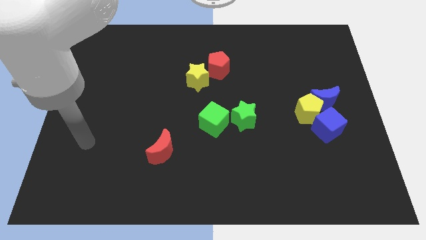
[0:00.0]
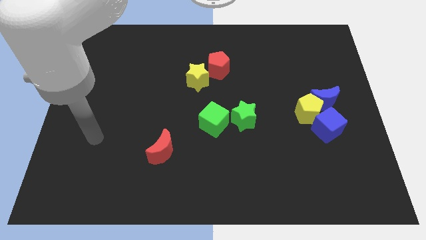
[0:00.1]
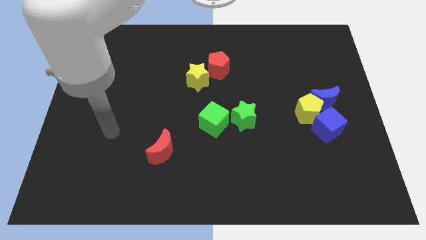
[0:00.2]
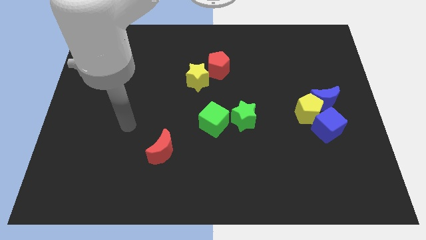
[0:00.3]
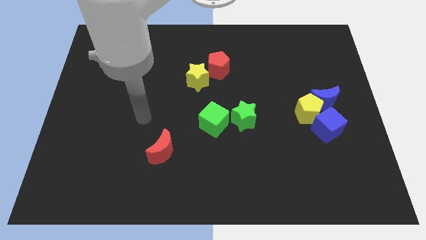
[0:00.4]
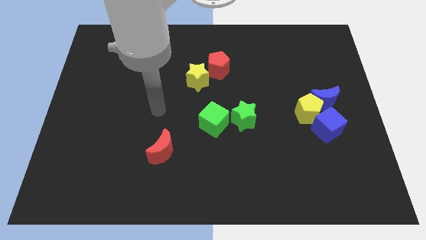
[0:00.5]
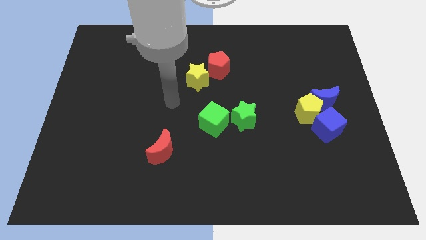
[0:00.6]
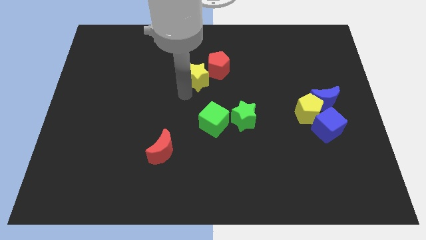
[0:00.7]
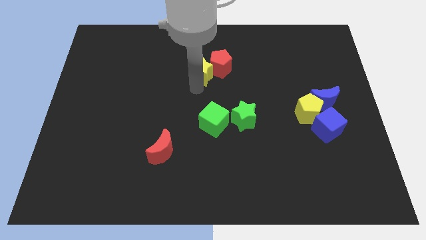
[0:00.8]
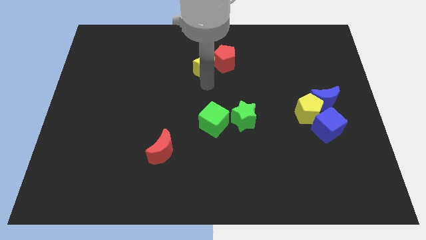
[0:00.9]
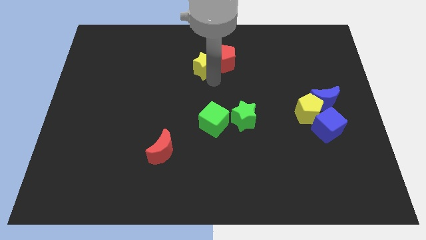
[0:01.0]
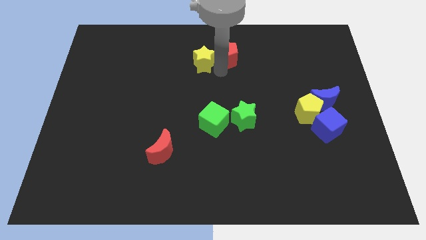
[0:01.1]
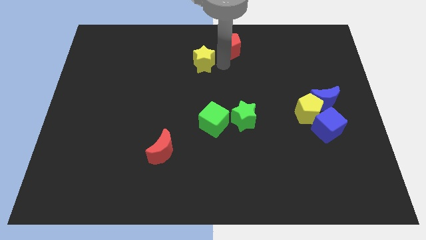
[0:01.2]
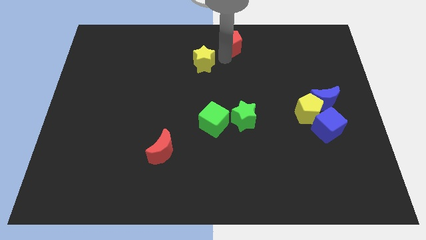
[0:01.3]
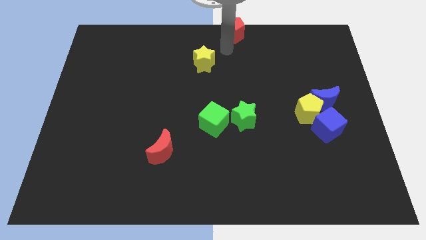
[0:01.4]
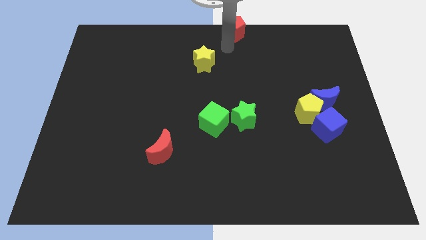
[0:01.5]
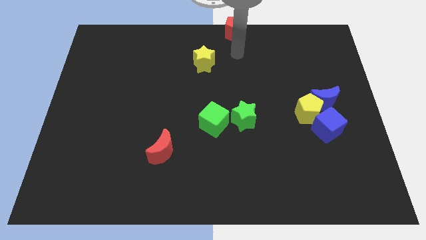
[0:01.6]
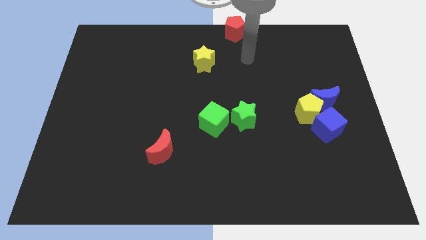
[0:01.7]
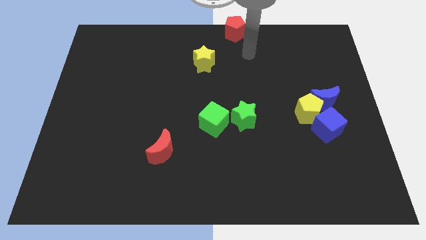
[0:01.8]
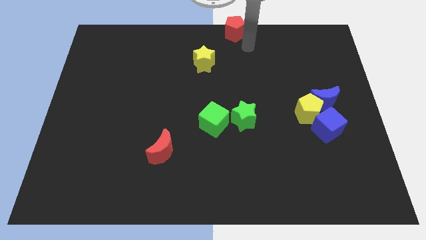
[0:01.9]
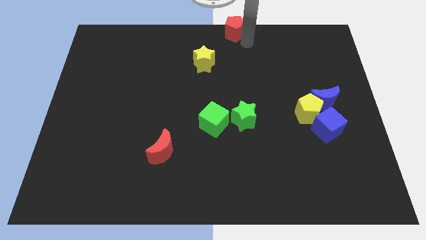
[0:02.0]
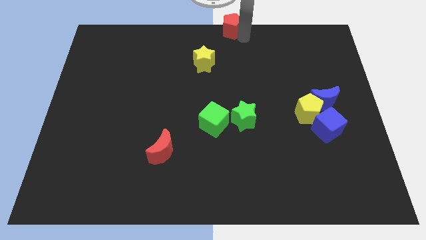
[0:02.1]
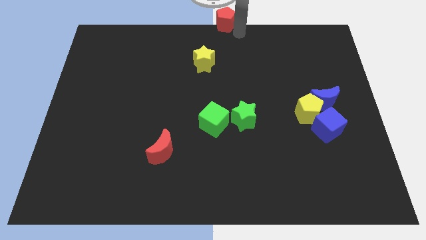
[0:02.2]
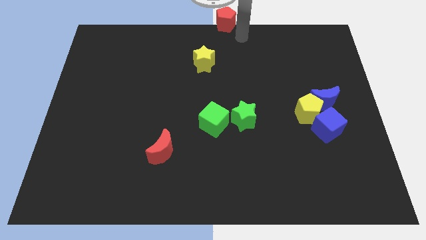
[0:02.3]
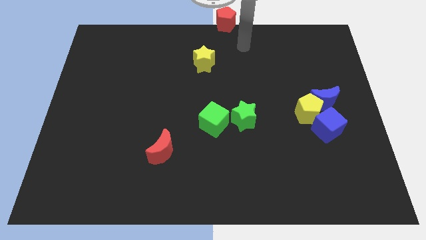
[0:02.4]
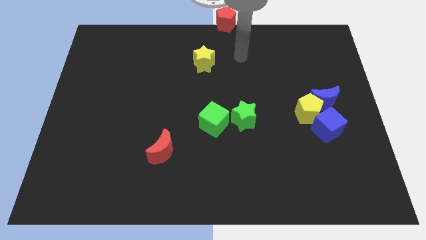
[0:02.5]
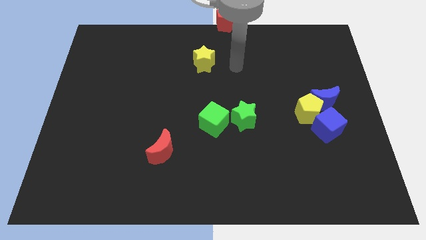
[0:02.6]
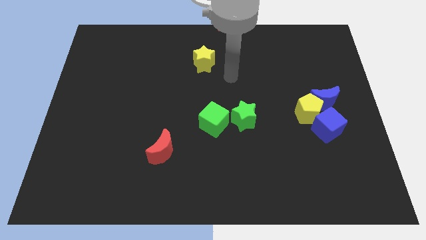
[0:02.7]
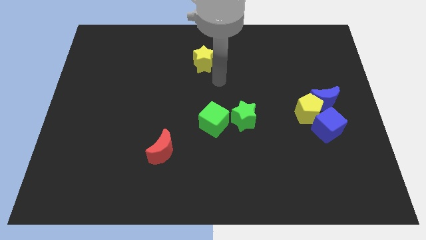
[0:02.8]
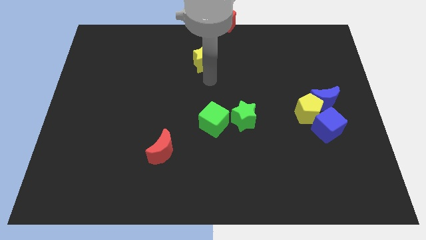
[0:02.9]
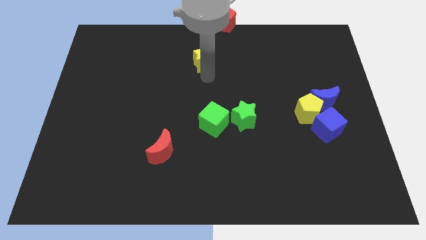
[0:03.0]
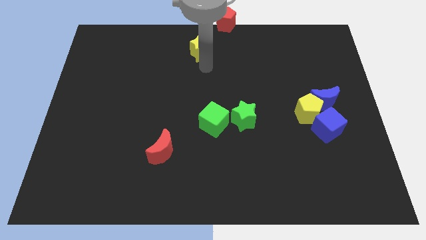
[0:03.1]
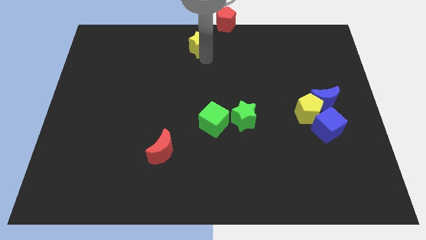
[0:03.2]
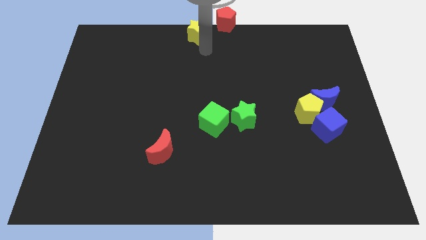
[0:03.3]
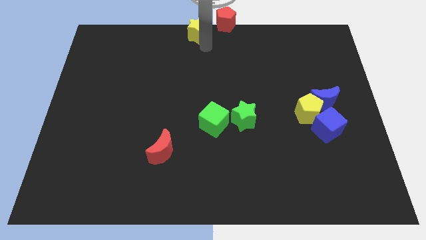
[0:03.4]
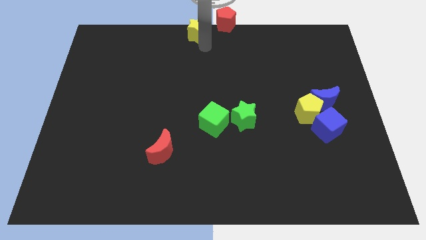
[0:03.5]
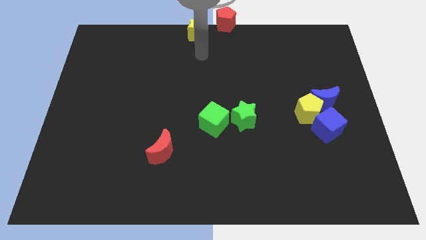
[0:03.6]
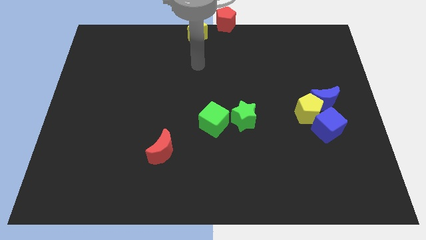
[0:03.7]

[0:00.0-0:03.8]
place the red pentagon and yellow star towards the top center

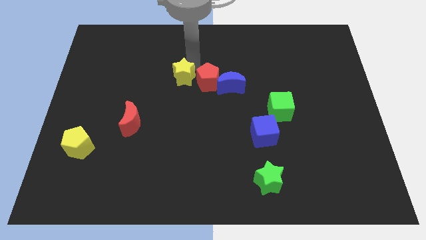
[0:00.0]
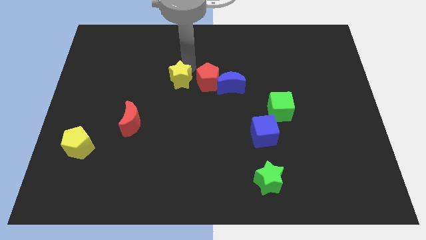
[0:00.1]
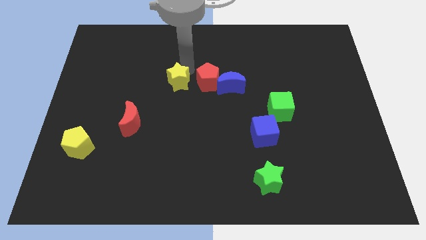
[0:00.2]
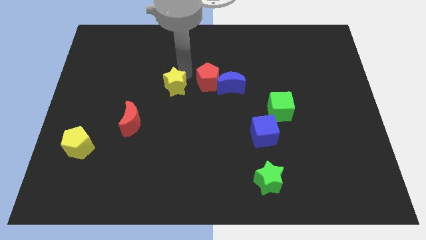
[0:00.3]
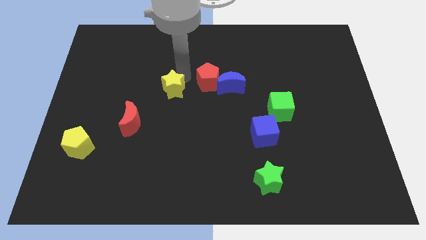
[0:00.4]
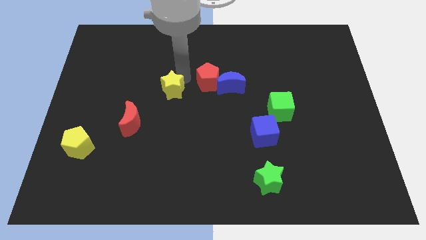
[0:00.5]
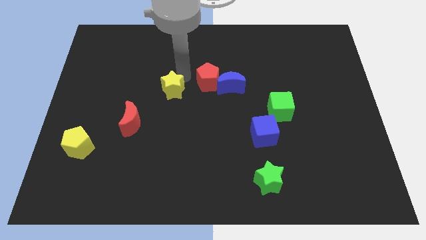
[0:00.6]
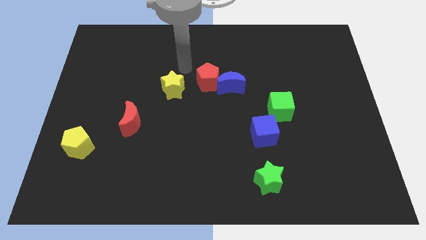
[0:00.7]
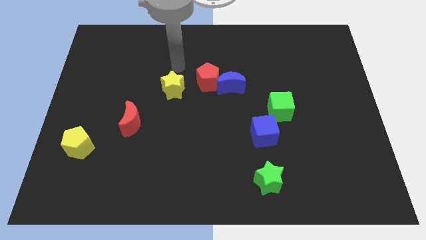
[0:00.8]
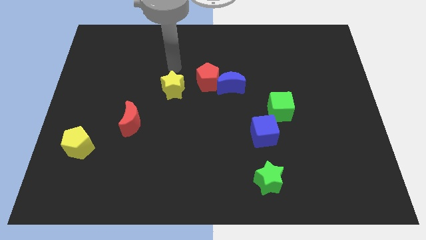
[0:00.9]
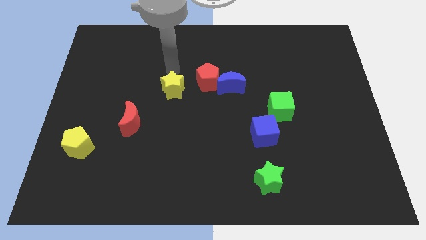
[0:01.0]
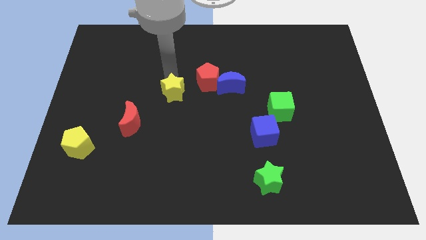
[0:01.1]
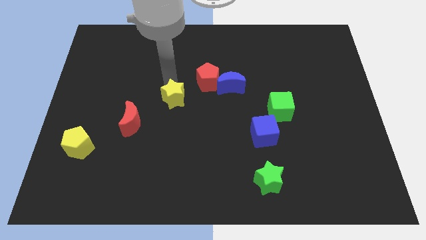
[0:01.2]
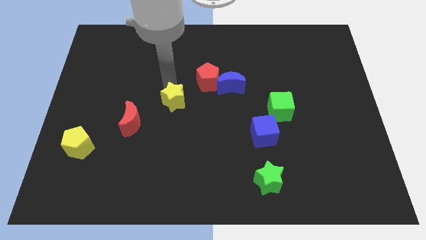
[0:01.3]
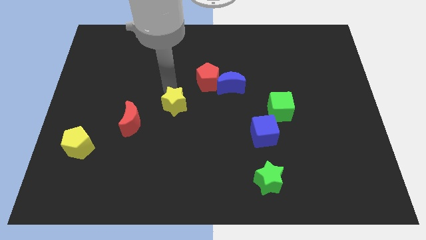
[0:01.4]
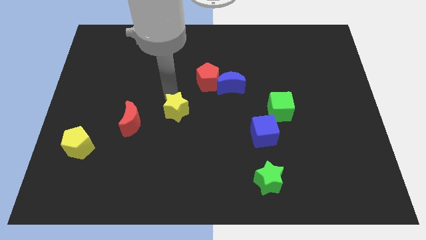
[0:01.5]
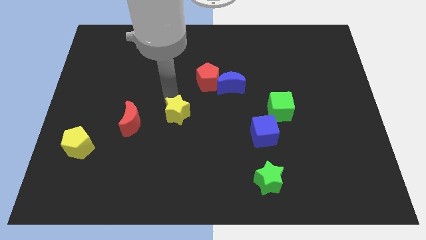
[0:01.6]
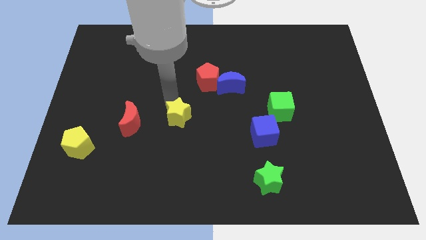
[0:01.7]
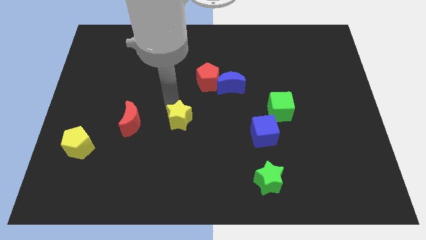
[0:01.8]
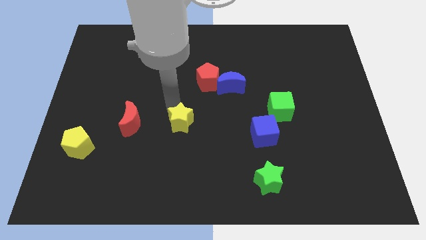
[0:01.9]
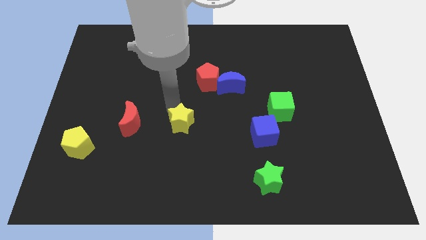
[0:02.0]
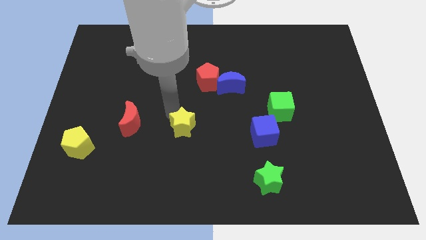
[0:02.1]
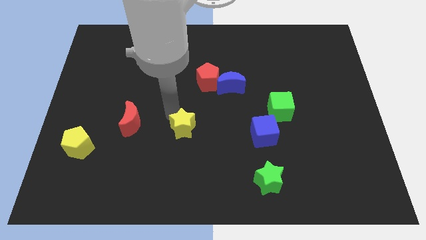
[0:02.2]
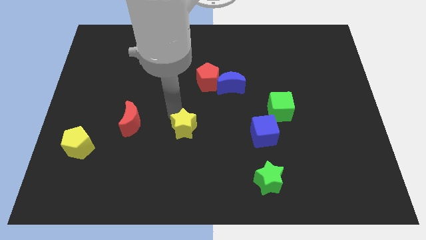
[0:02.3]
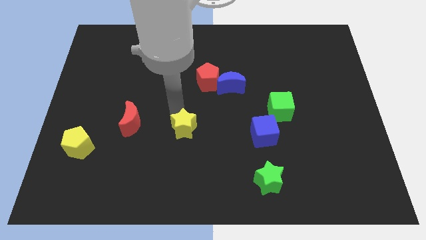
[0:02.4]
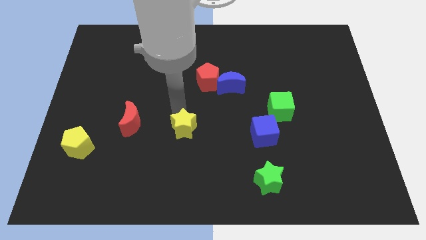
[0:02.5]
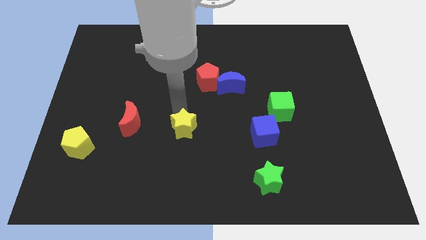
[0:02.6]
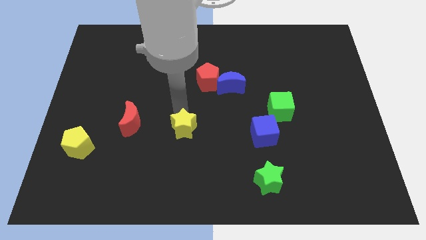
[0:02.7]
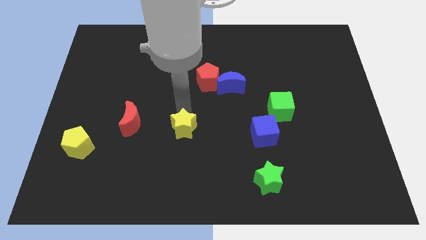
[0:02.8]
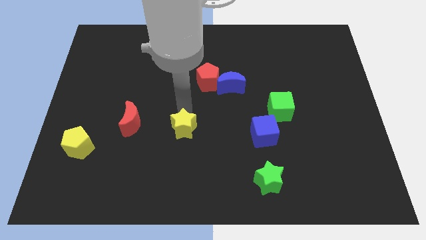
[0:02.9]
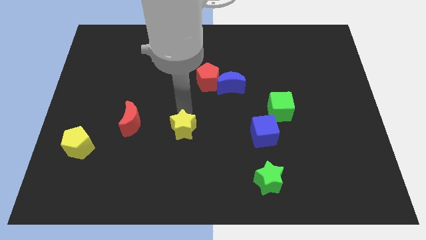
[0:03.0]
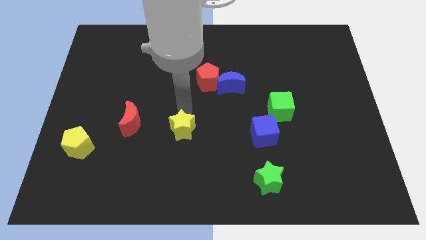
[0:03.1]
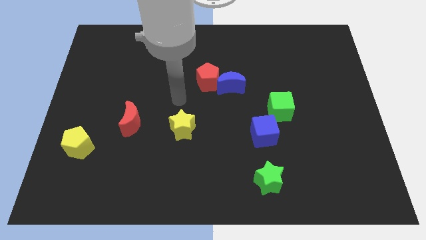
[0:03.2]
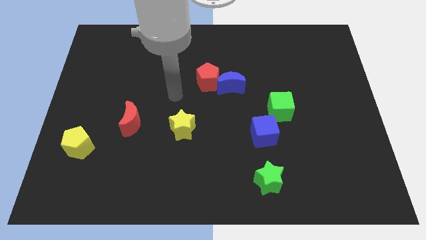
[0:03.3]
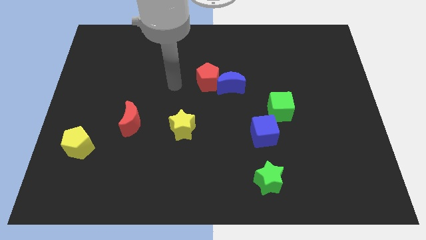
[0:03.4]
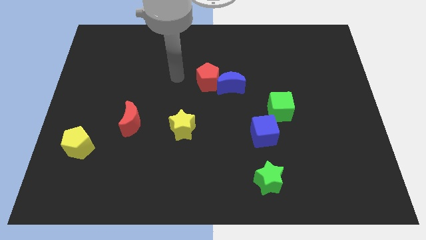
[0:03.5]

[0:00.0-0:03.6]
put the yellow star diagonally on the bottom left side of the red pentagon

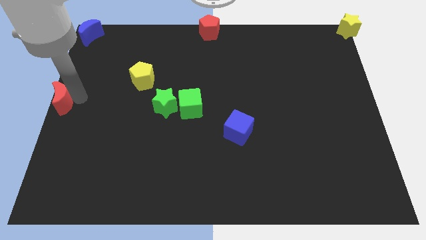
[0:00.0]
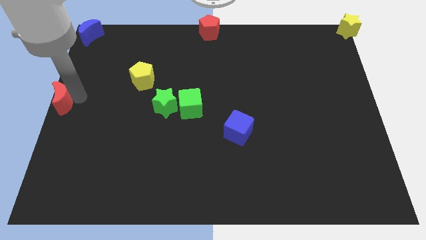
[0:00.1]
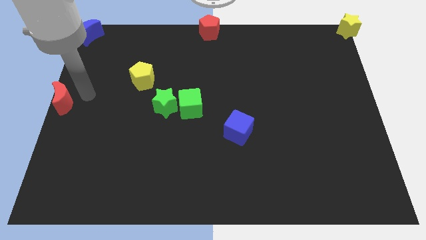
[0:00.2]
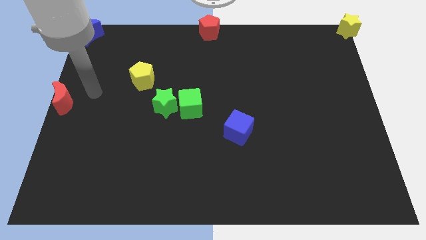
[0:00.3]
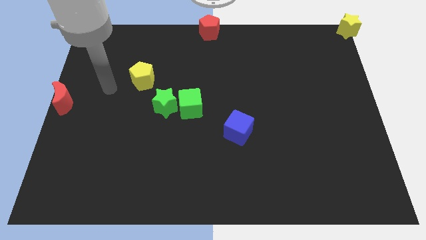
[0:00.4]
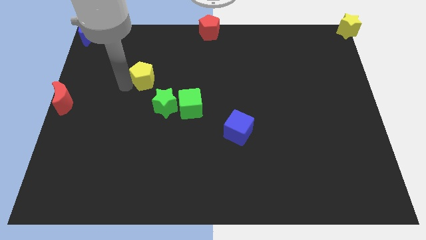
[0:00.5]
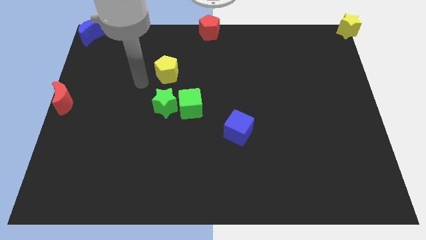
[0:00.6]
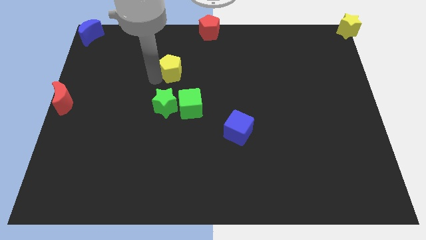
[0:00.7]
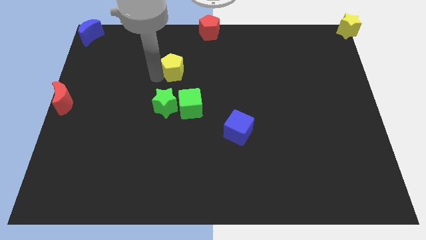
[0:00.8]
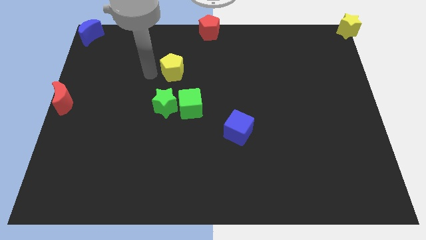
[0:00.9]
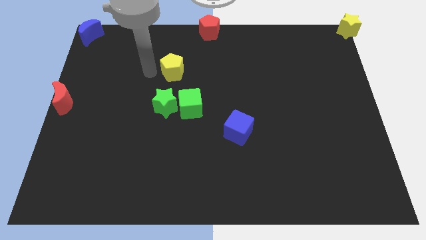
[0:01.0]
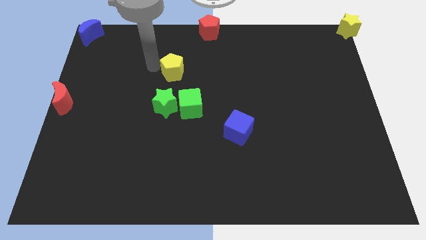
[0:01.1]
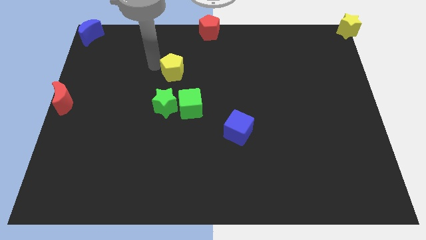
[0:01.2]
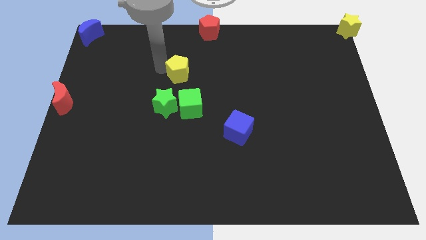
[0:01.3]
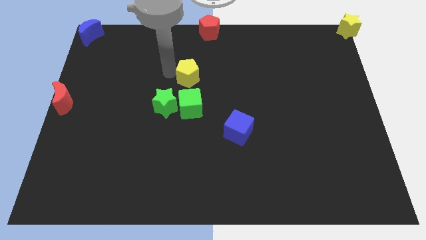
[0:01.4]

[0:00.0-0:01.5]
move the yellow pentagon above the green cube
